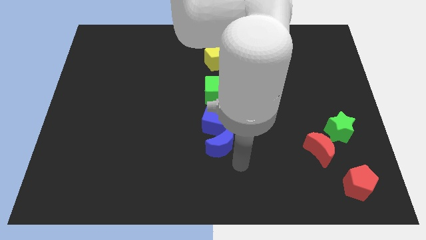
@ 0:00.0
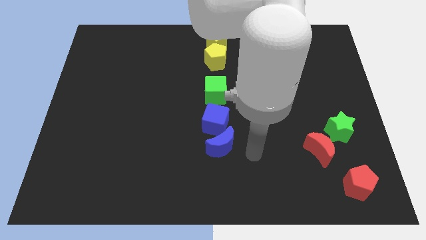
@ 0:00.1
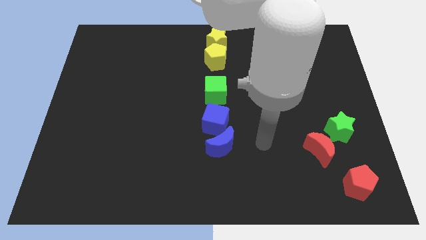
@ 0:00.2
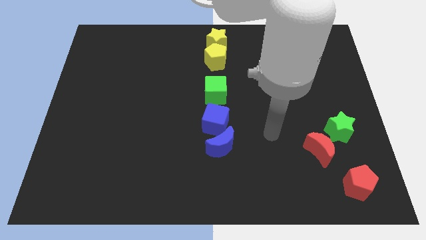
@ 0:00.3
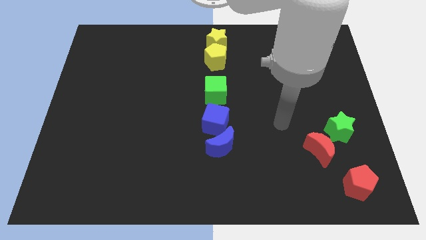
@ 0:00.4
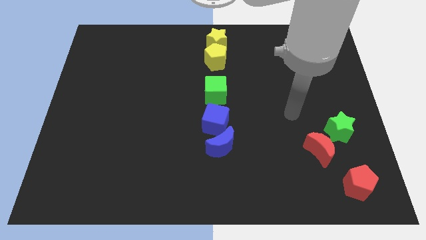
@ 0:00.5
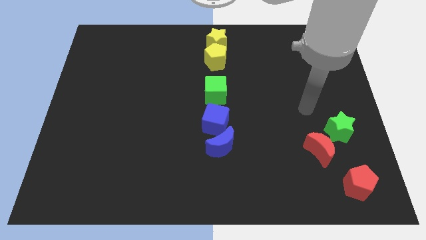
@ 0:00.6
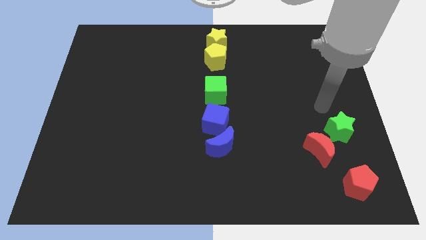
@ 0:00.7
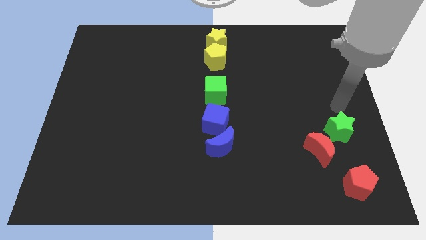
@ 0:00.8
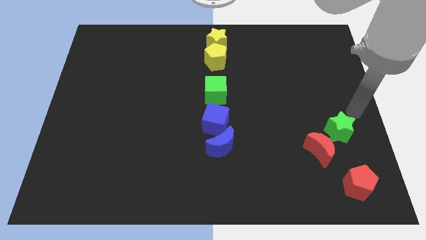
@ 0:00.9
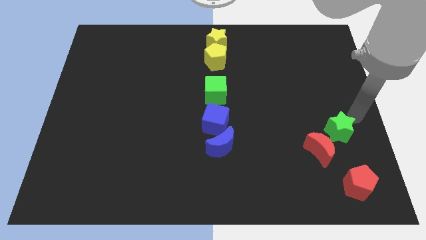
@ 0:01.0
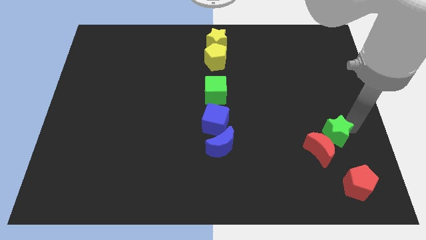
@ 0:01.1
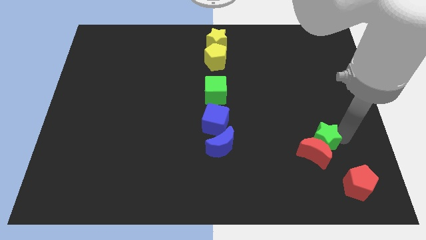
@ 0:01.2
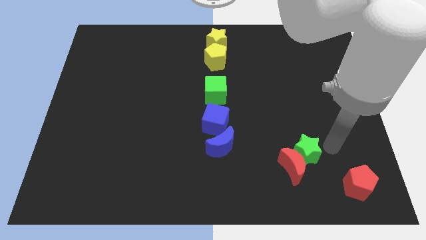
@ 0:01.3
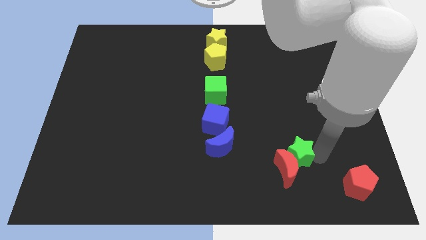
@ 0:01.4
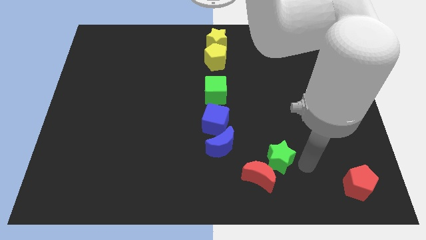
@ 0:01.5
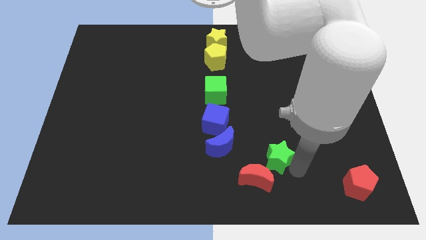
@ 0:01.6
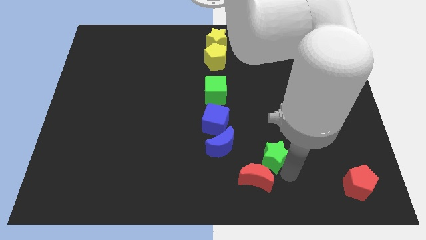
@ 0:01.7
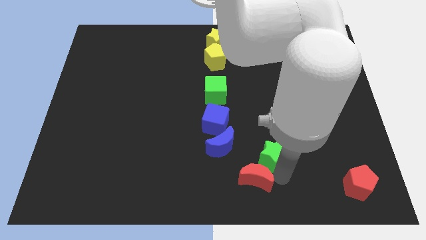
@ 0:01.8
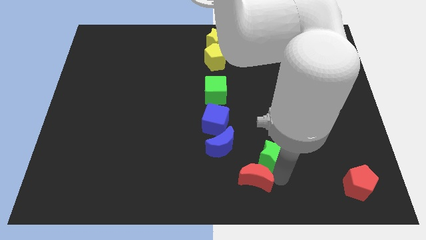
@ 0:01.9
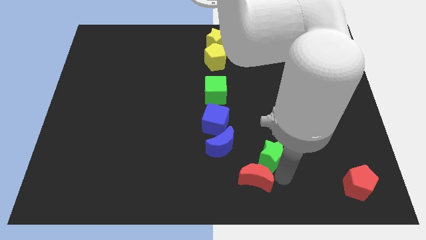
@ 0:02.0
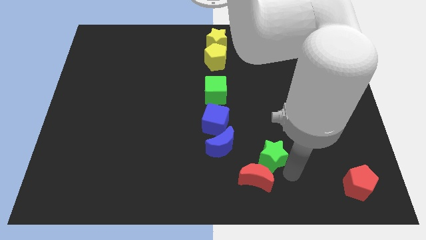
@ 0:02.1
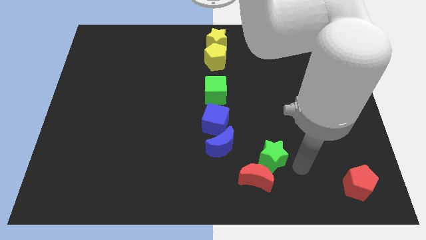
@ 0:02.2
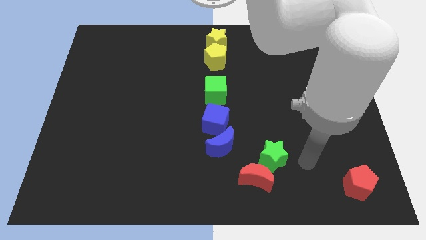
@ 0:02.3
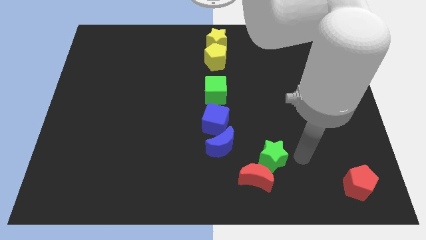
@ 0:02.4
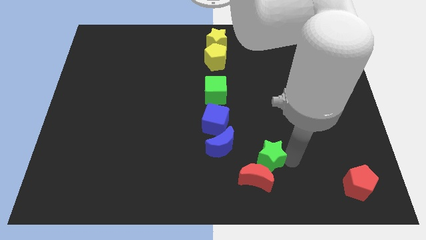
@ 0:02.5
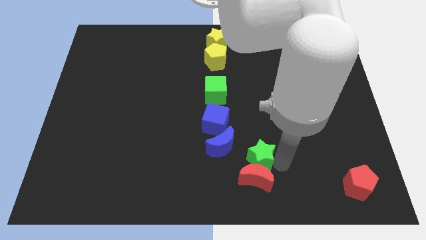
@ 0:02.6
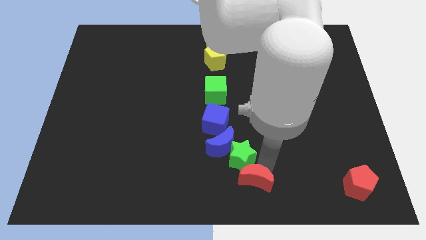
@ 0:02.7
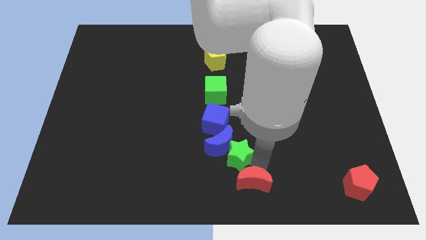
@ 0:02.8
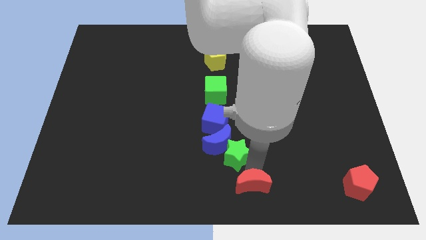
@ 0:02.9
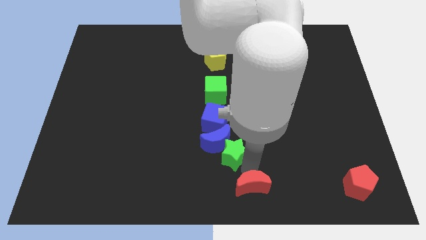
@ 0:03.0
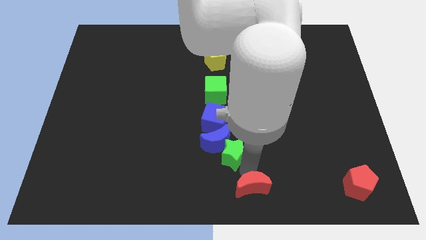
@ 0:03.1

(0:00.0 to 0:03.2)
slide green star and red crescent towards bottom center

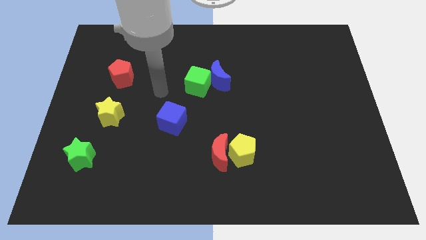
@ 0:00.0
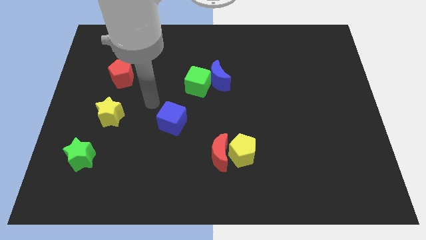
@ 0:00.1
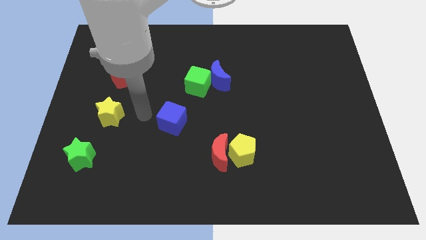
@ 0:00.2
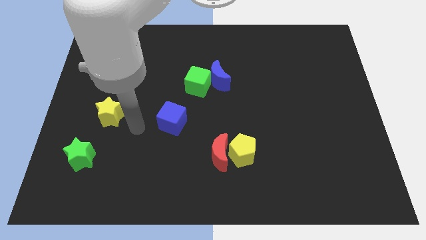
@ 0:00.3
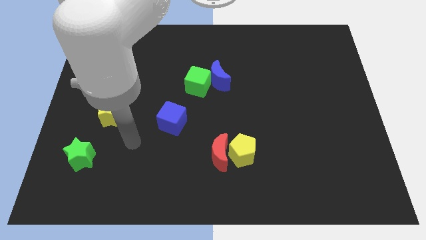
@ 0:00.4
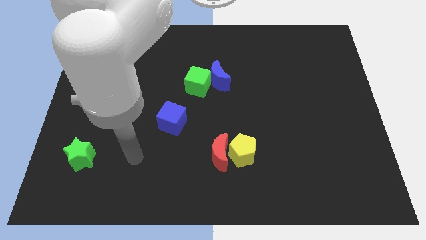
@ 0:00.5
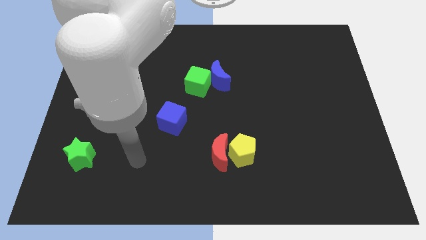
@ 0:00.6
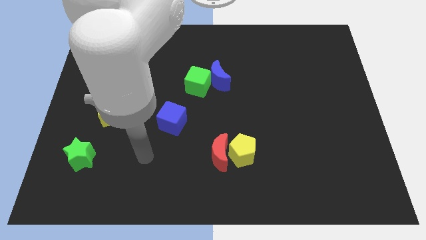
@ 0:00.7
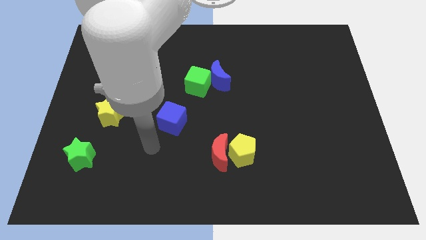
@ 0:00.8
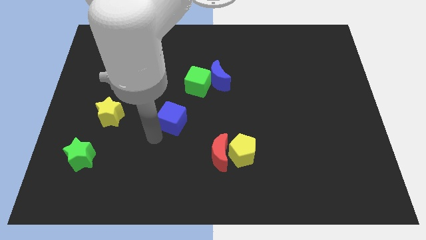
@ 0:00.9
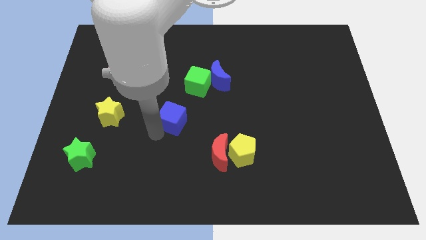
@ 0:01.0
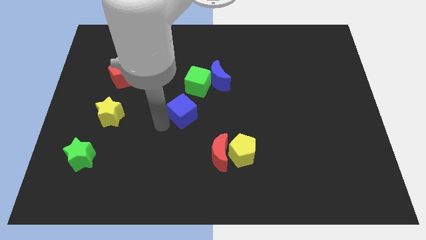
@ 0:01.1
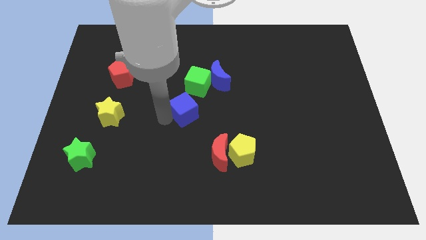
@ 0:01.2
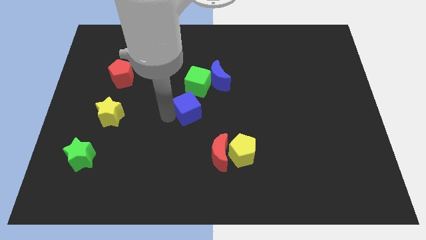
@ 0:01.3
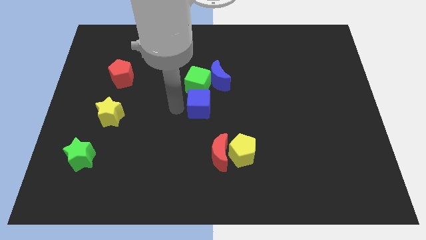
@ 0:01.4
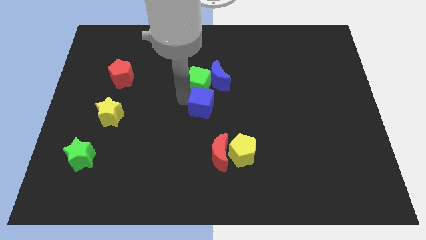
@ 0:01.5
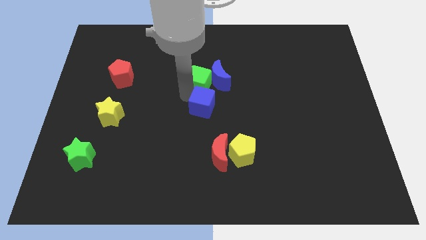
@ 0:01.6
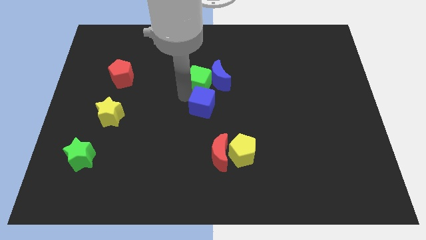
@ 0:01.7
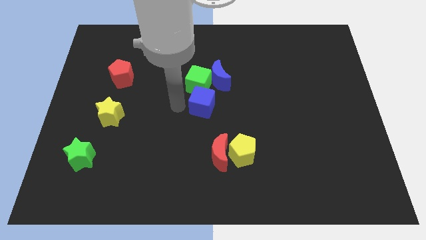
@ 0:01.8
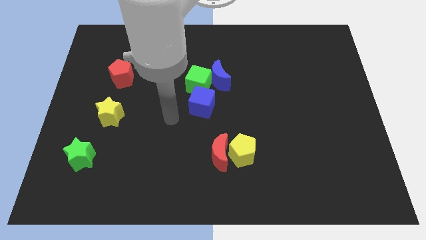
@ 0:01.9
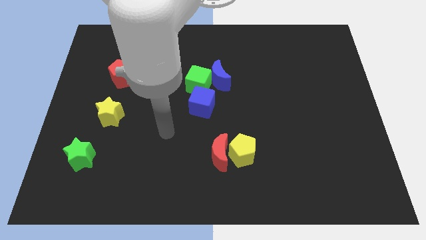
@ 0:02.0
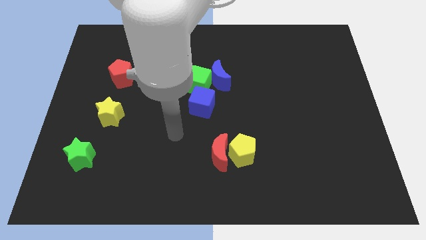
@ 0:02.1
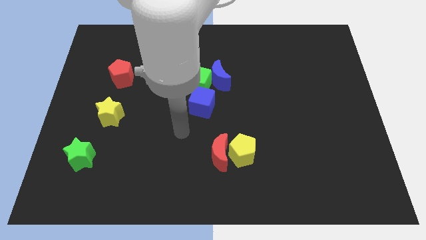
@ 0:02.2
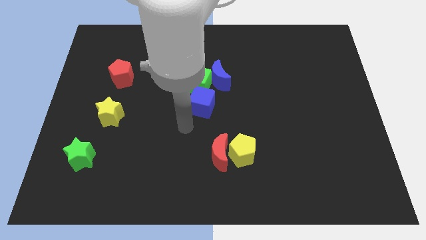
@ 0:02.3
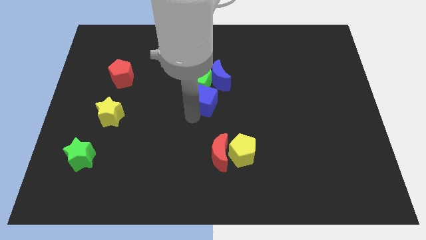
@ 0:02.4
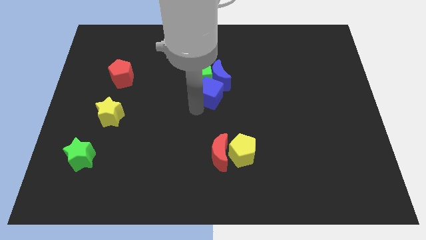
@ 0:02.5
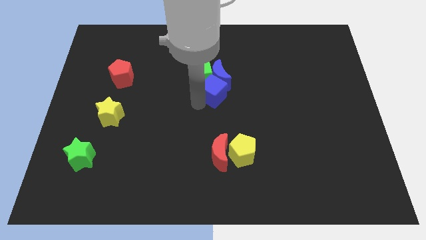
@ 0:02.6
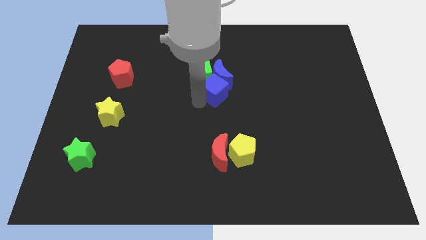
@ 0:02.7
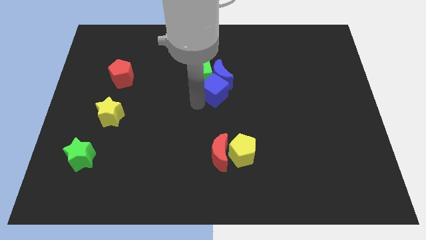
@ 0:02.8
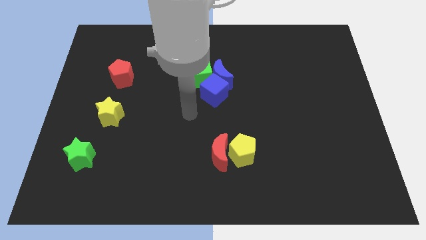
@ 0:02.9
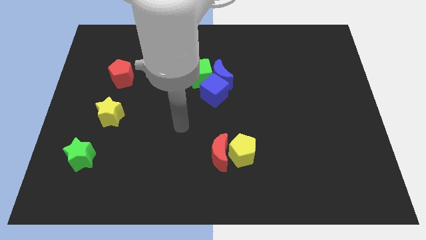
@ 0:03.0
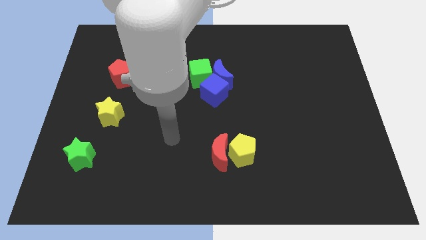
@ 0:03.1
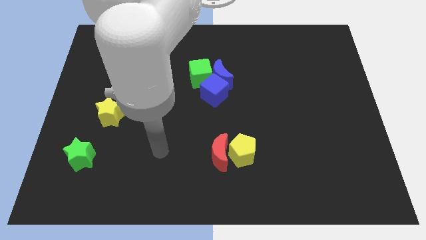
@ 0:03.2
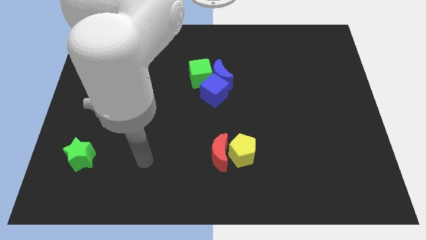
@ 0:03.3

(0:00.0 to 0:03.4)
slide blue cube into the blue moon

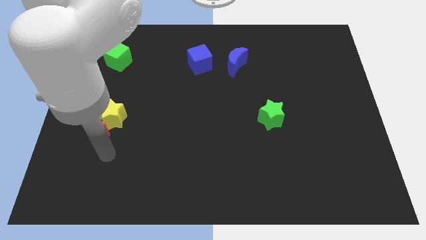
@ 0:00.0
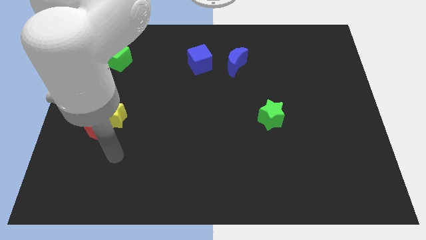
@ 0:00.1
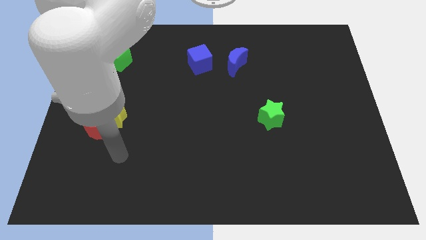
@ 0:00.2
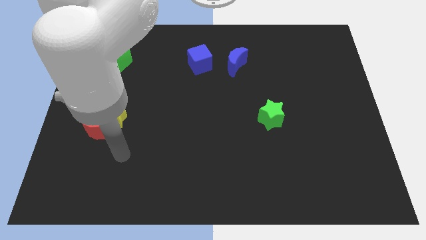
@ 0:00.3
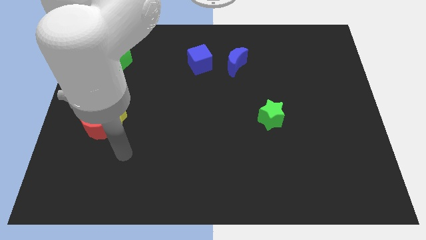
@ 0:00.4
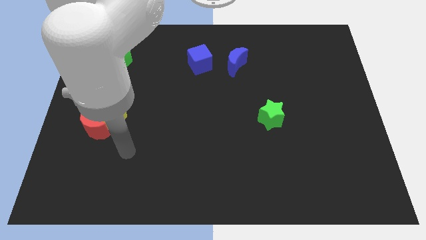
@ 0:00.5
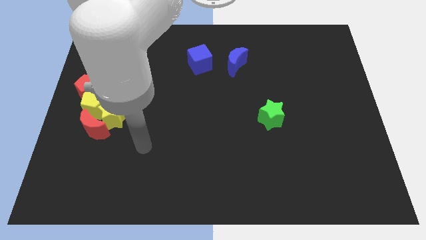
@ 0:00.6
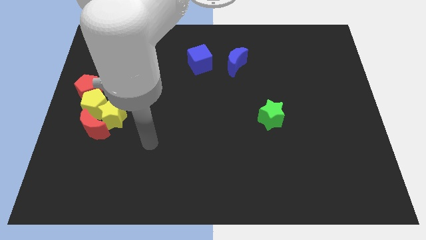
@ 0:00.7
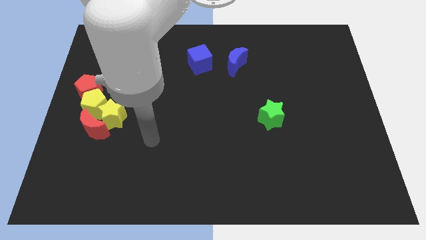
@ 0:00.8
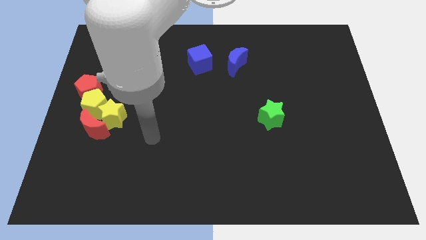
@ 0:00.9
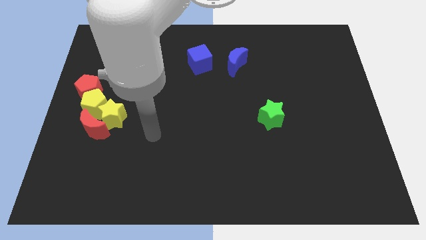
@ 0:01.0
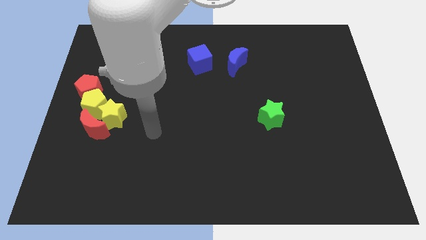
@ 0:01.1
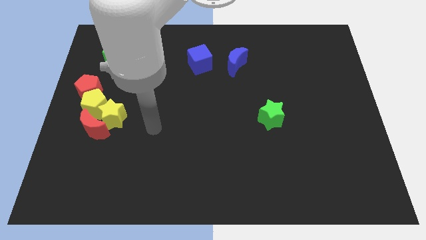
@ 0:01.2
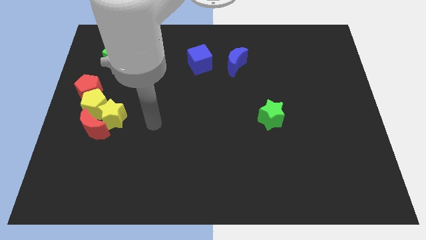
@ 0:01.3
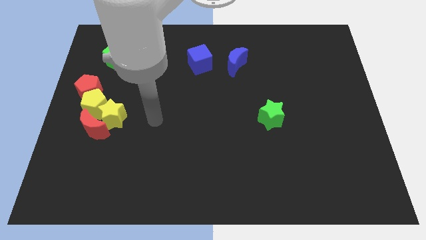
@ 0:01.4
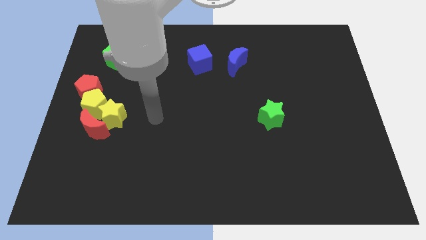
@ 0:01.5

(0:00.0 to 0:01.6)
move your arm away from the red crescent

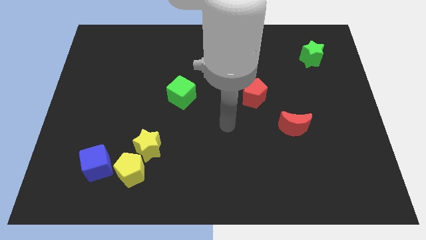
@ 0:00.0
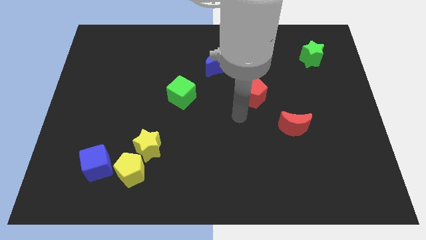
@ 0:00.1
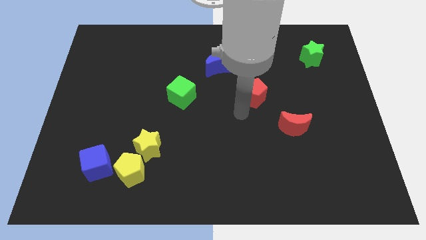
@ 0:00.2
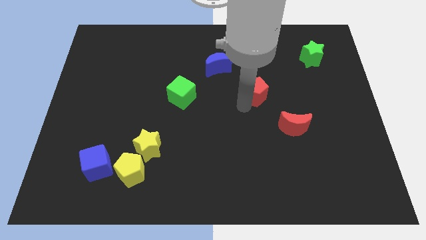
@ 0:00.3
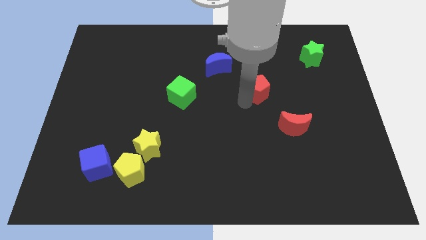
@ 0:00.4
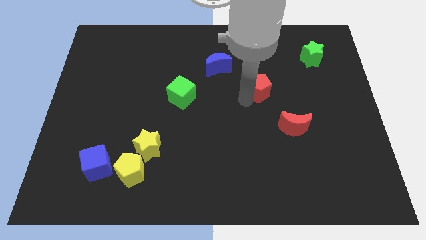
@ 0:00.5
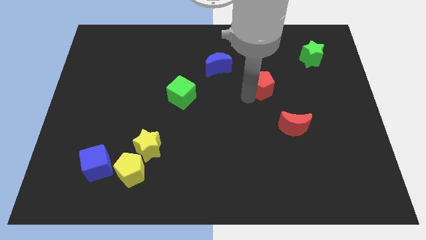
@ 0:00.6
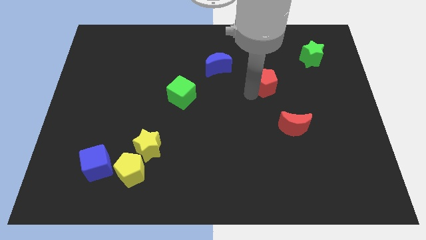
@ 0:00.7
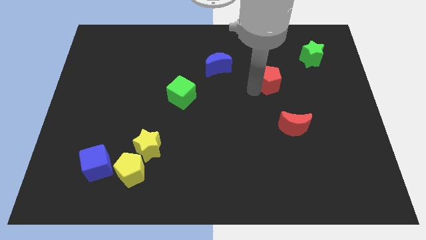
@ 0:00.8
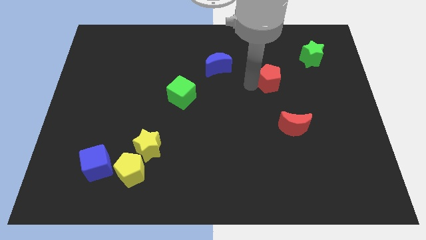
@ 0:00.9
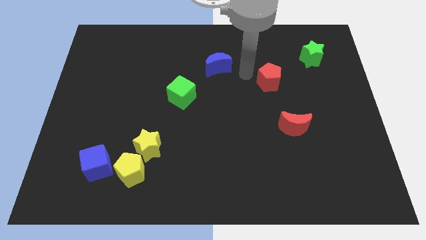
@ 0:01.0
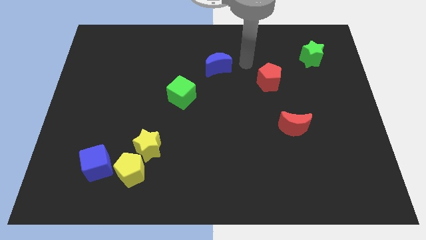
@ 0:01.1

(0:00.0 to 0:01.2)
move the red pentagon diagonally to the green star
